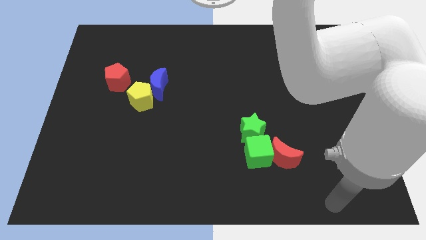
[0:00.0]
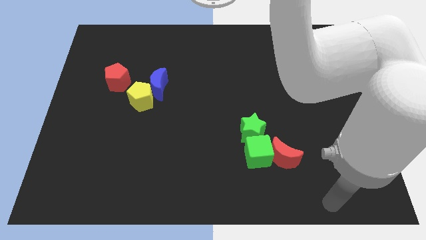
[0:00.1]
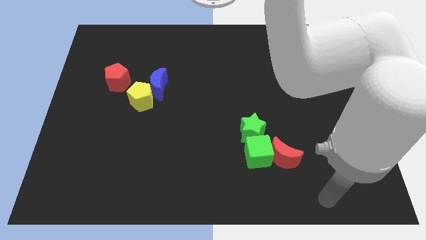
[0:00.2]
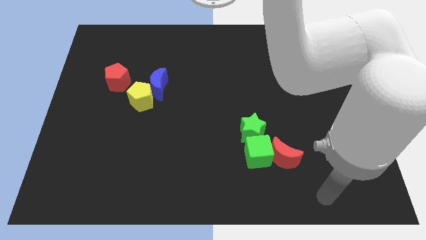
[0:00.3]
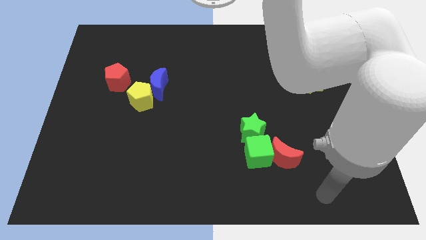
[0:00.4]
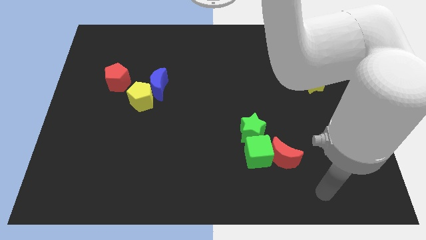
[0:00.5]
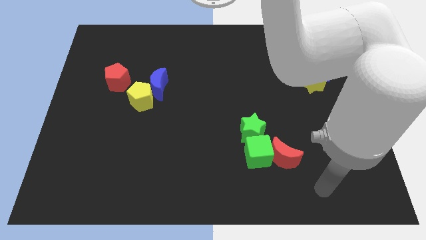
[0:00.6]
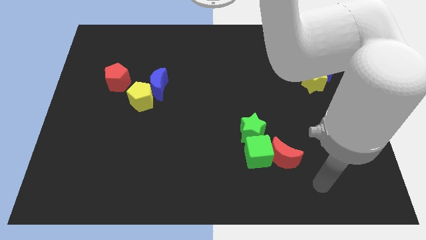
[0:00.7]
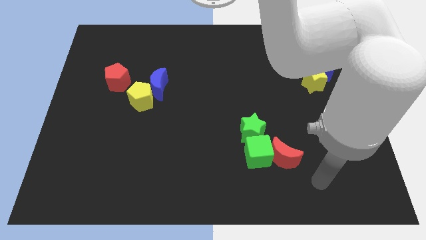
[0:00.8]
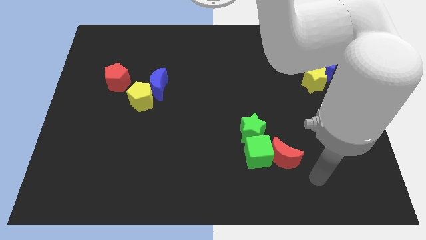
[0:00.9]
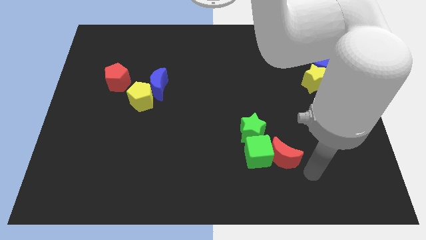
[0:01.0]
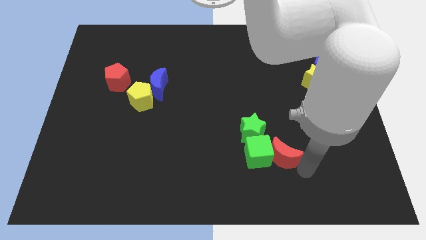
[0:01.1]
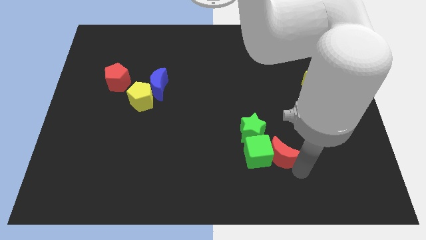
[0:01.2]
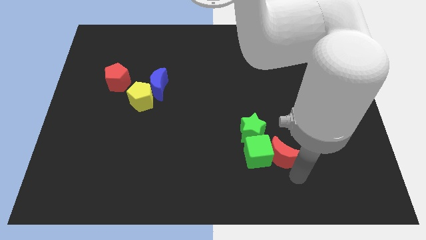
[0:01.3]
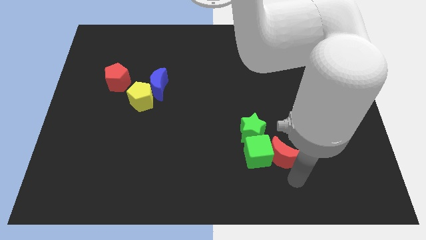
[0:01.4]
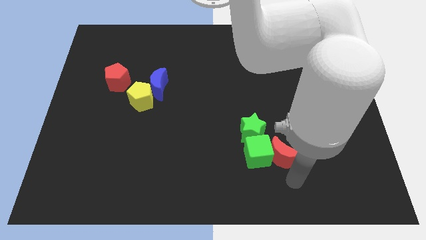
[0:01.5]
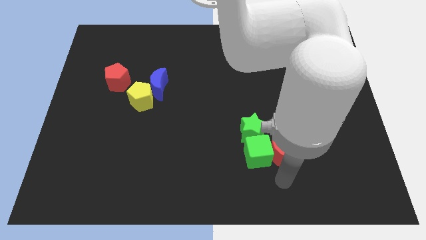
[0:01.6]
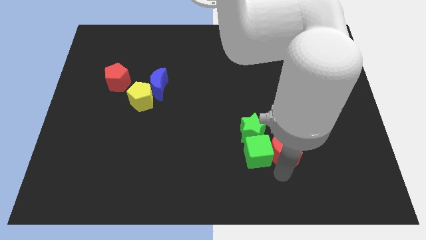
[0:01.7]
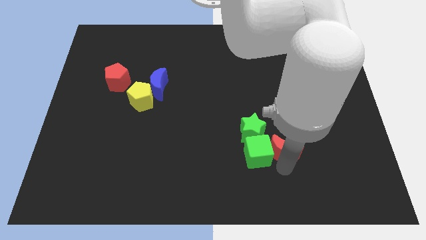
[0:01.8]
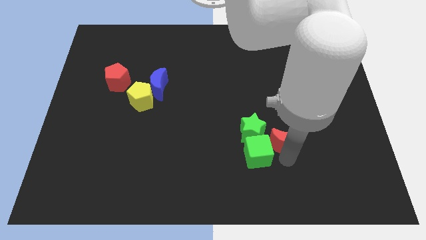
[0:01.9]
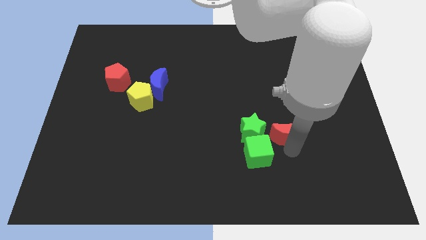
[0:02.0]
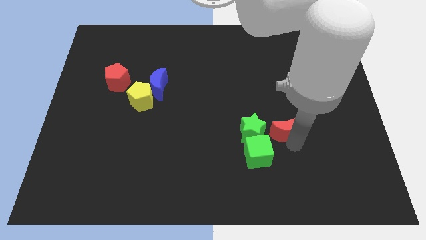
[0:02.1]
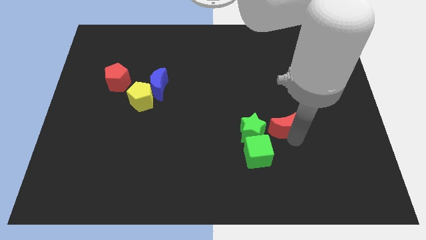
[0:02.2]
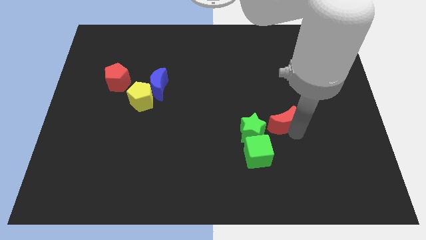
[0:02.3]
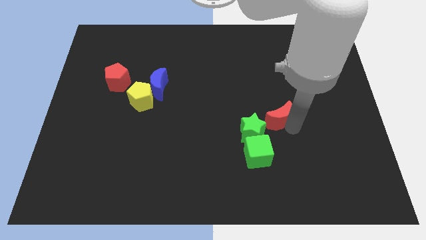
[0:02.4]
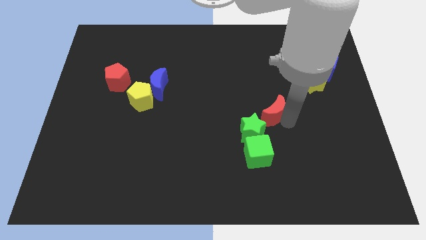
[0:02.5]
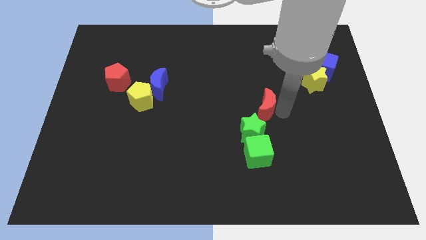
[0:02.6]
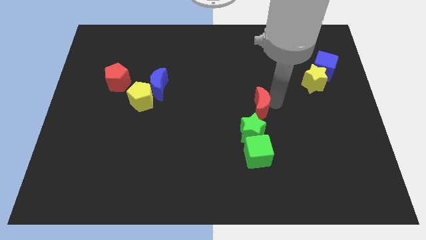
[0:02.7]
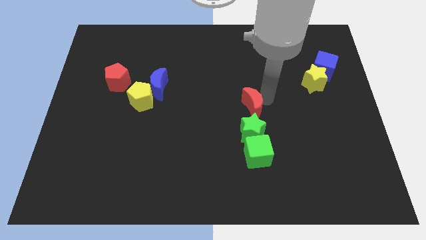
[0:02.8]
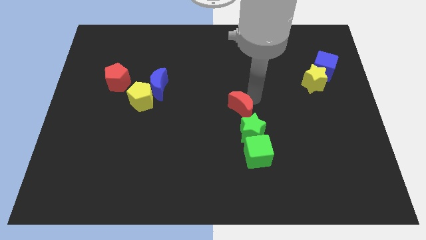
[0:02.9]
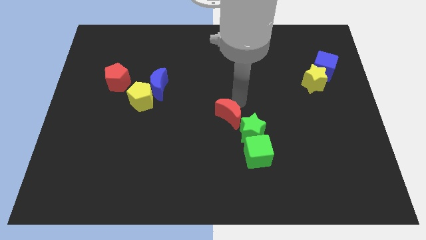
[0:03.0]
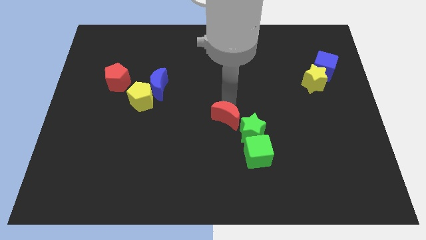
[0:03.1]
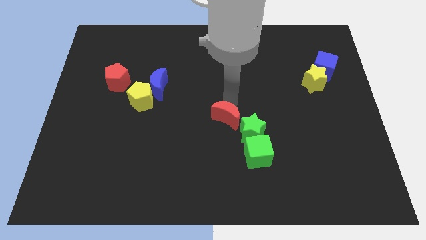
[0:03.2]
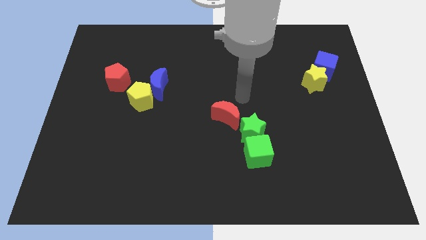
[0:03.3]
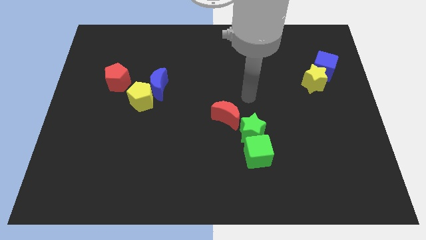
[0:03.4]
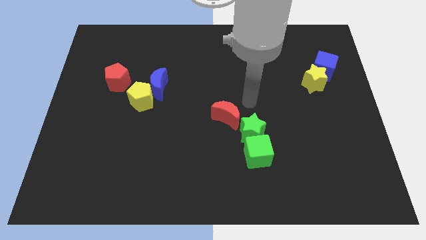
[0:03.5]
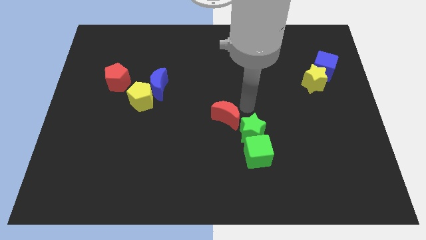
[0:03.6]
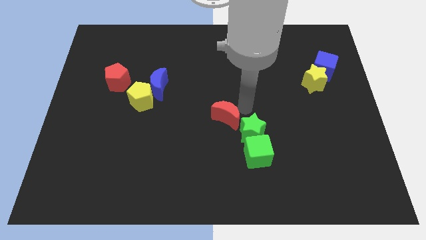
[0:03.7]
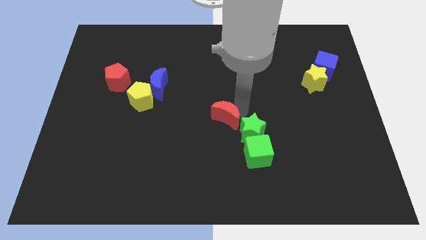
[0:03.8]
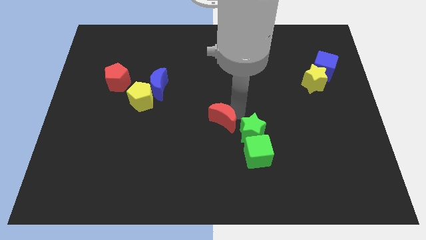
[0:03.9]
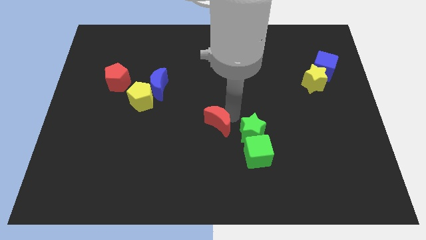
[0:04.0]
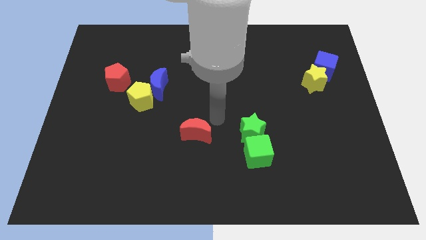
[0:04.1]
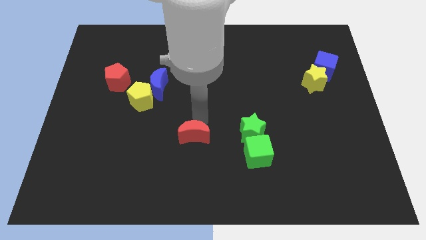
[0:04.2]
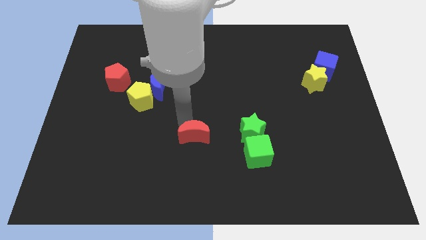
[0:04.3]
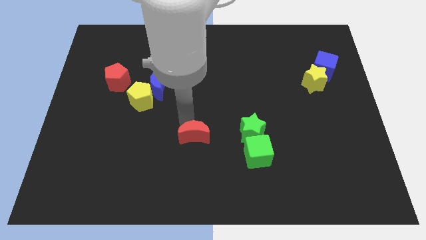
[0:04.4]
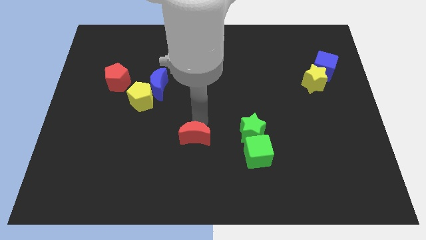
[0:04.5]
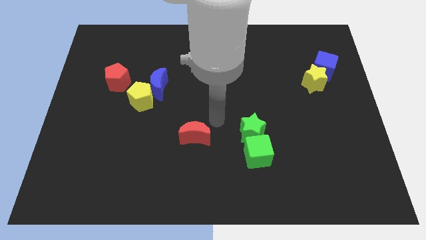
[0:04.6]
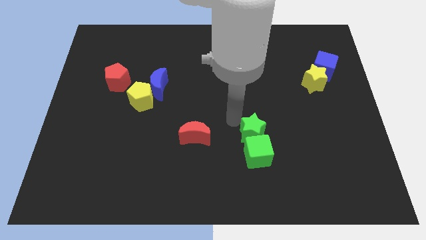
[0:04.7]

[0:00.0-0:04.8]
move the red crescent to the left side of the green blocks

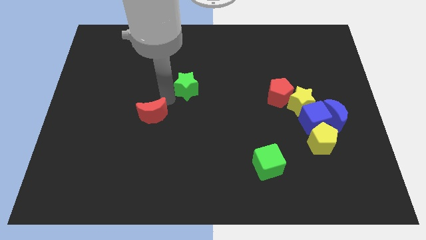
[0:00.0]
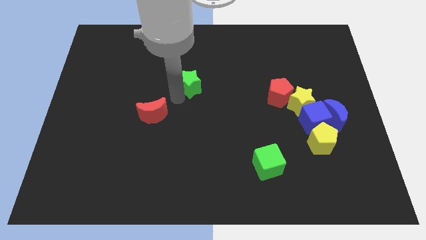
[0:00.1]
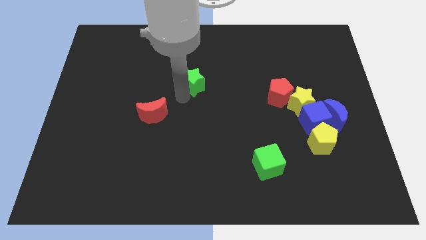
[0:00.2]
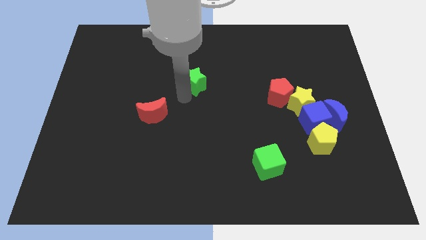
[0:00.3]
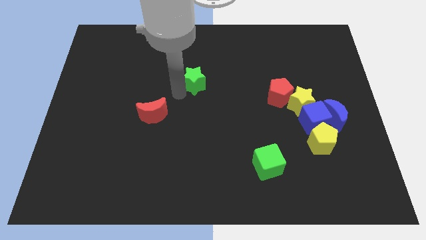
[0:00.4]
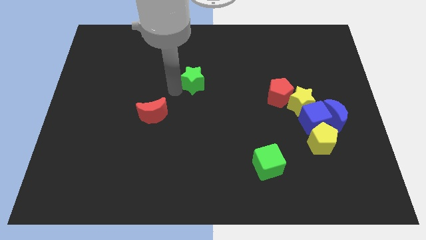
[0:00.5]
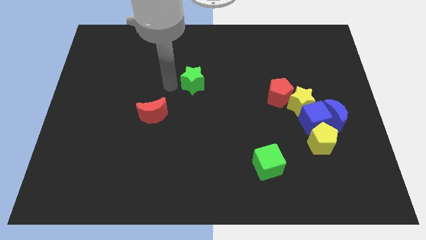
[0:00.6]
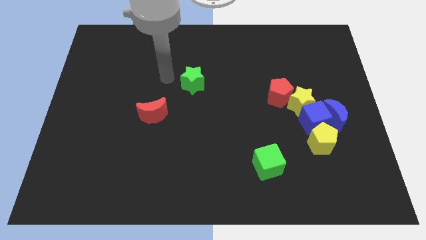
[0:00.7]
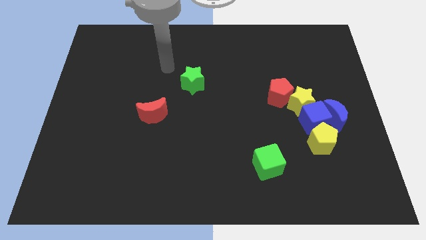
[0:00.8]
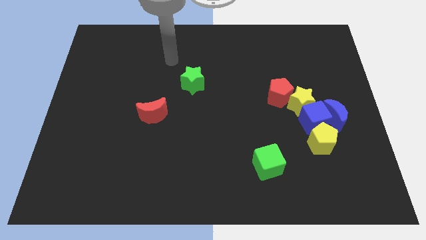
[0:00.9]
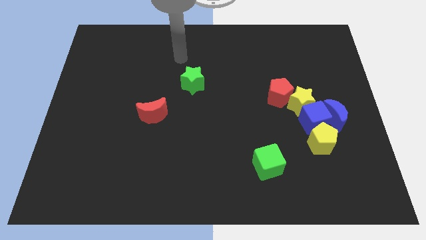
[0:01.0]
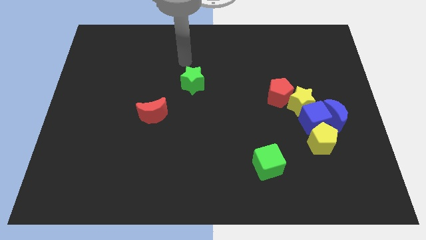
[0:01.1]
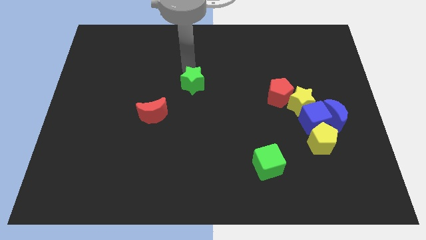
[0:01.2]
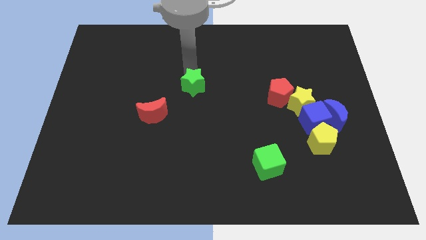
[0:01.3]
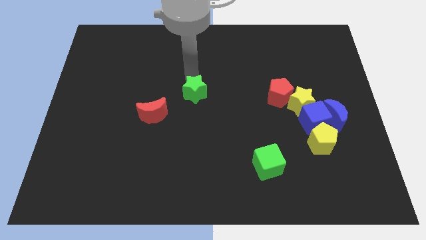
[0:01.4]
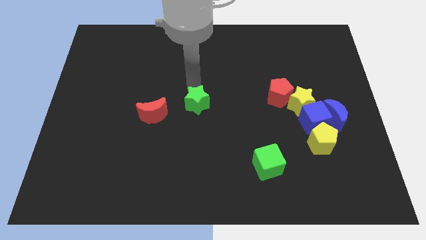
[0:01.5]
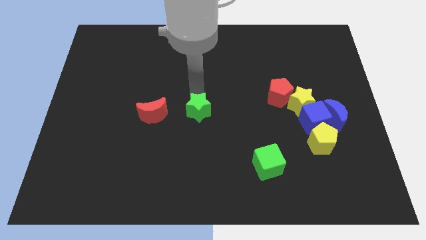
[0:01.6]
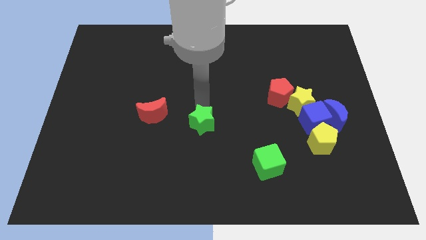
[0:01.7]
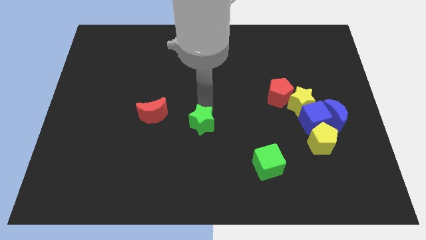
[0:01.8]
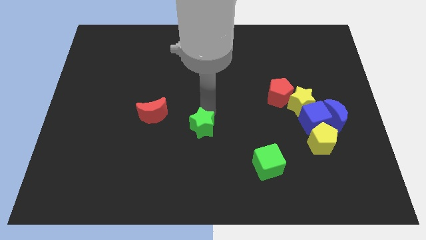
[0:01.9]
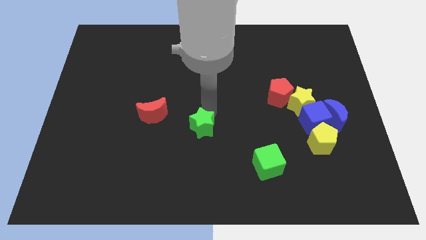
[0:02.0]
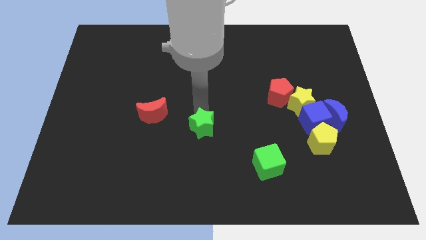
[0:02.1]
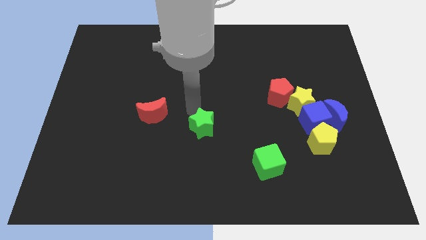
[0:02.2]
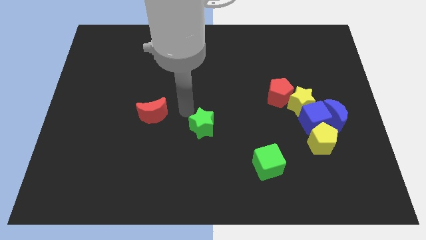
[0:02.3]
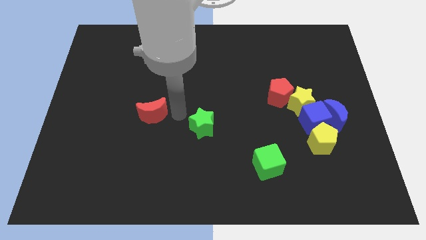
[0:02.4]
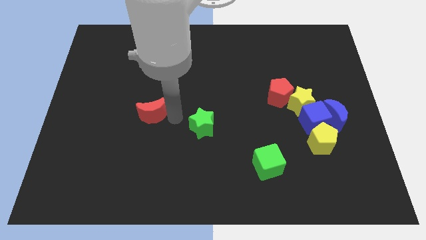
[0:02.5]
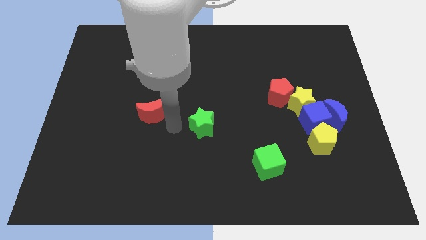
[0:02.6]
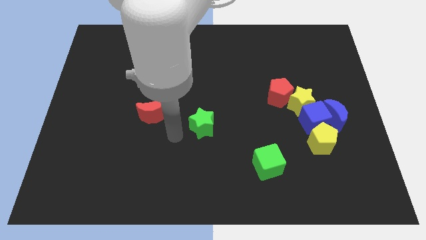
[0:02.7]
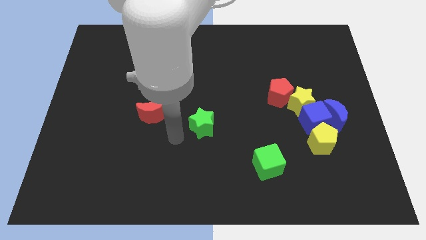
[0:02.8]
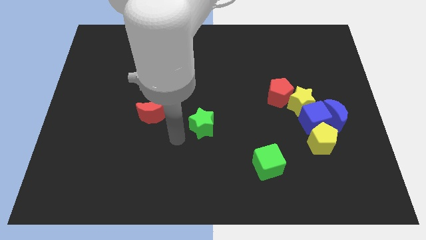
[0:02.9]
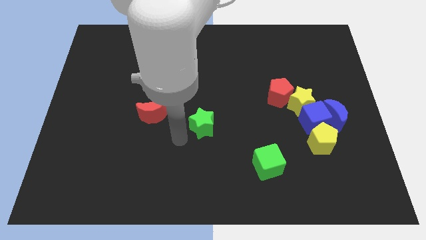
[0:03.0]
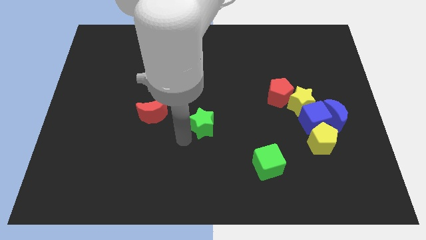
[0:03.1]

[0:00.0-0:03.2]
place the green star diagonal to the green cube

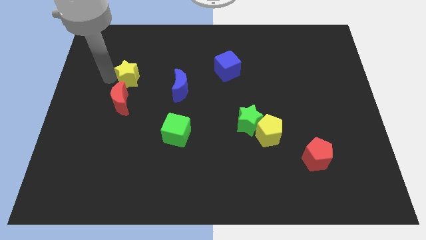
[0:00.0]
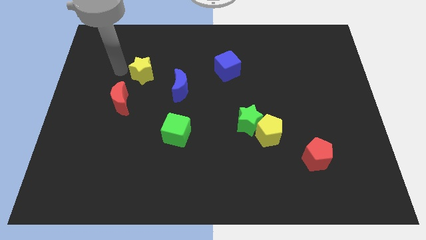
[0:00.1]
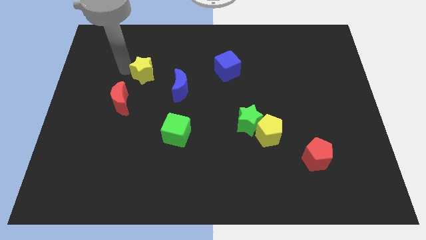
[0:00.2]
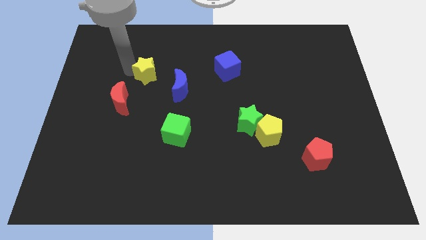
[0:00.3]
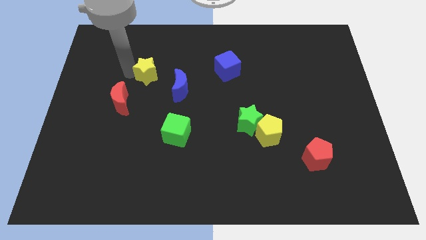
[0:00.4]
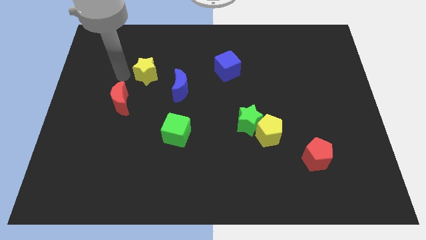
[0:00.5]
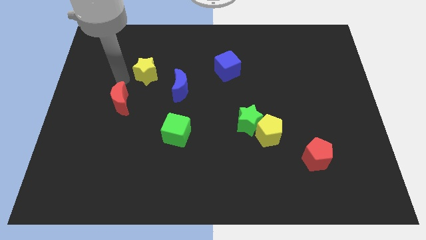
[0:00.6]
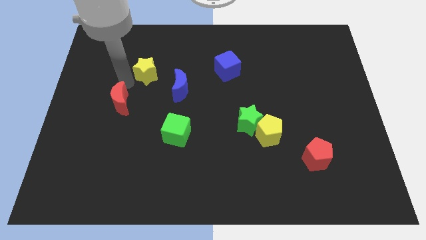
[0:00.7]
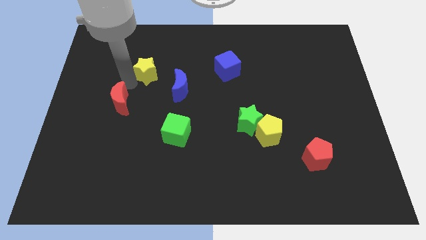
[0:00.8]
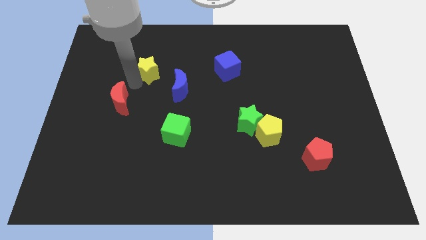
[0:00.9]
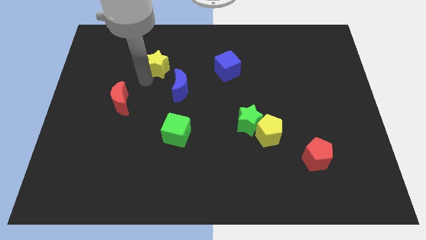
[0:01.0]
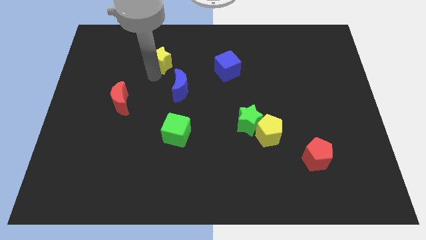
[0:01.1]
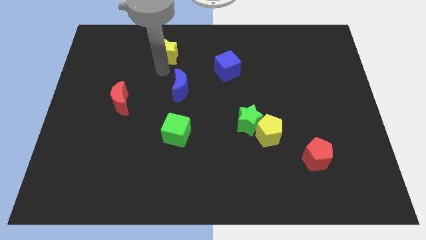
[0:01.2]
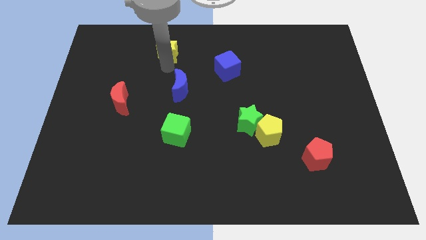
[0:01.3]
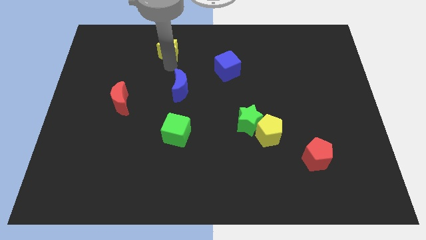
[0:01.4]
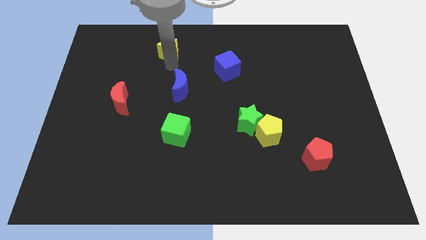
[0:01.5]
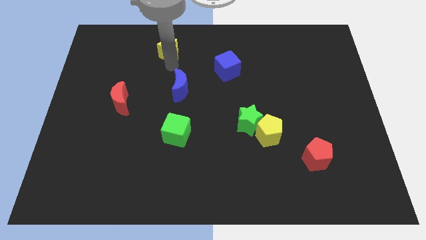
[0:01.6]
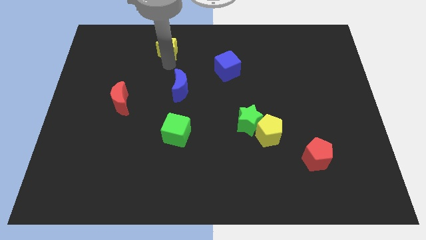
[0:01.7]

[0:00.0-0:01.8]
separate yellow star from red moon
